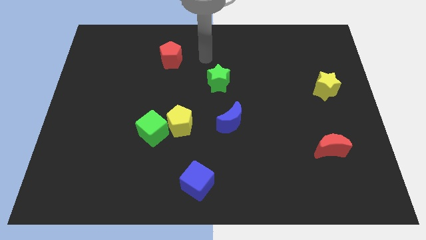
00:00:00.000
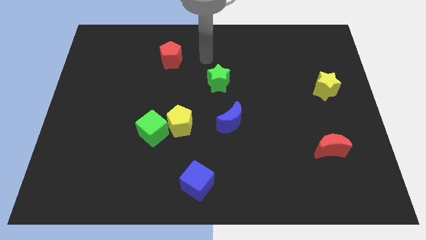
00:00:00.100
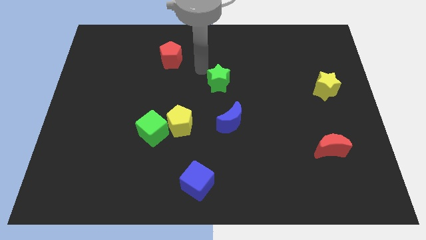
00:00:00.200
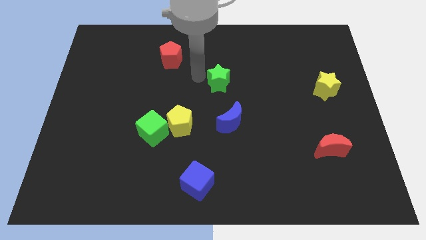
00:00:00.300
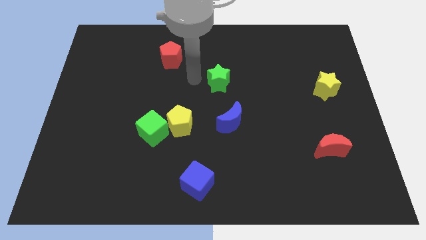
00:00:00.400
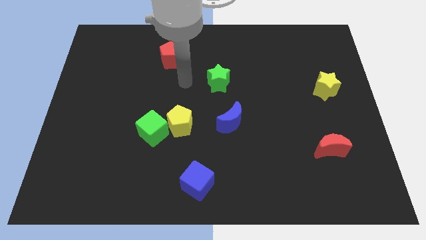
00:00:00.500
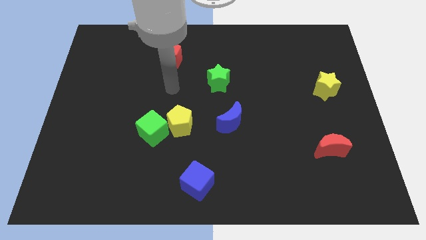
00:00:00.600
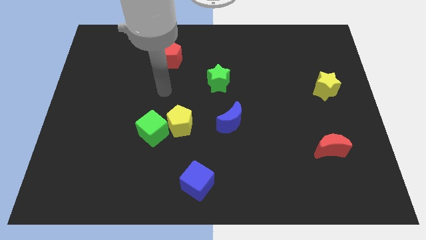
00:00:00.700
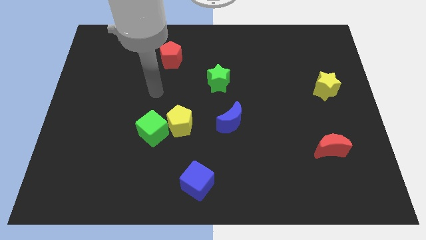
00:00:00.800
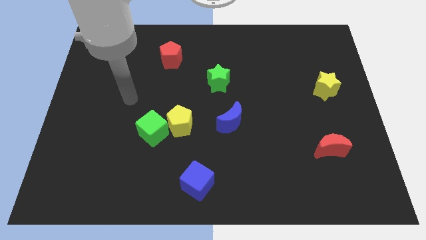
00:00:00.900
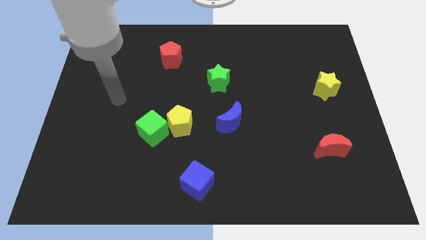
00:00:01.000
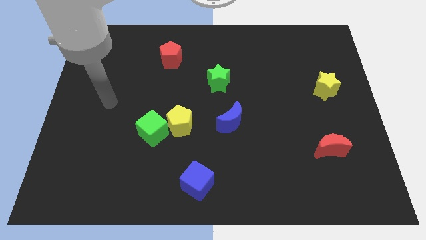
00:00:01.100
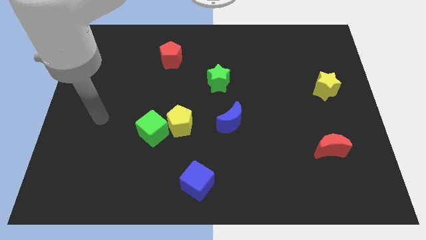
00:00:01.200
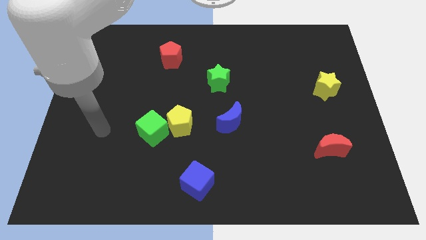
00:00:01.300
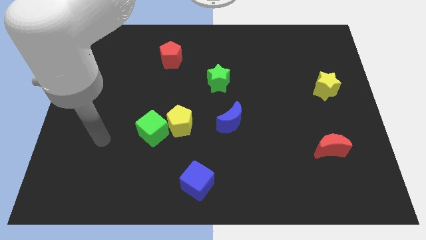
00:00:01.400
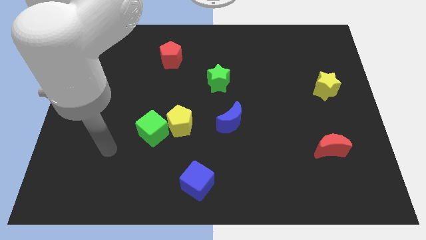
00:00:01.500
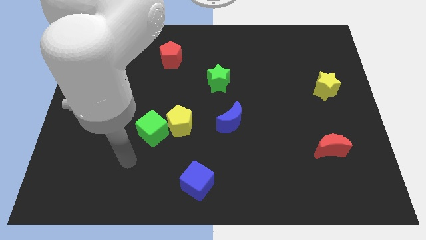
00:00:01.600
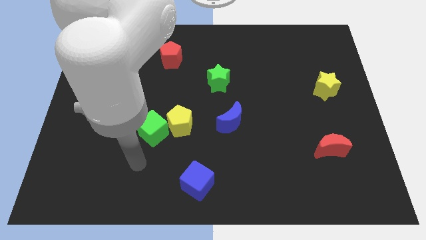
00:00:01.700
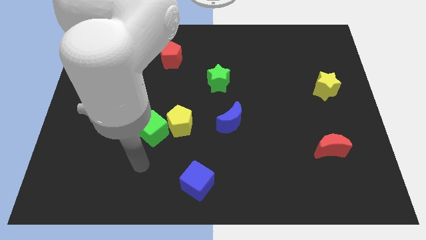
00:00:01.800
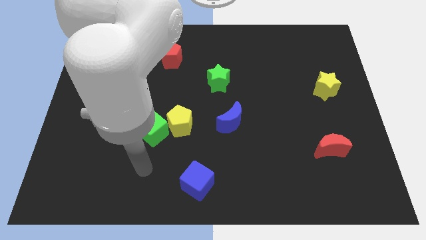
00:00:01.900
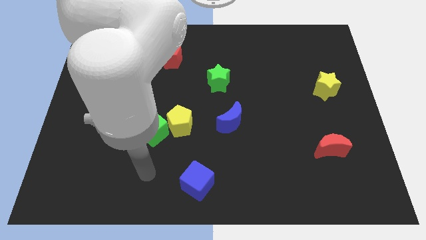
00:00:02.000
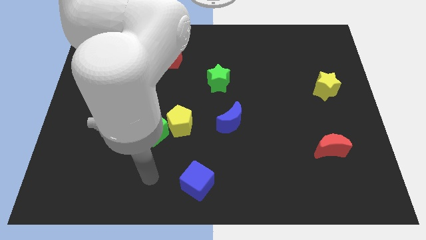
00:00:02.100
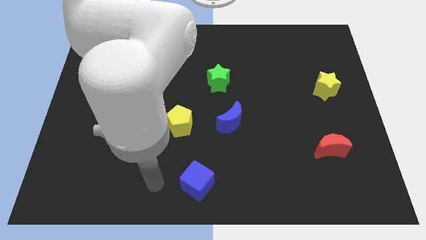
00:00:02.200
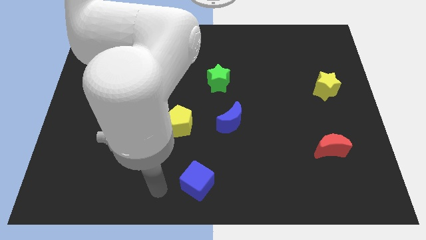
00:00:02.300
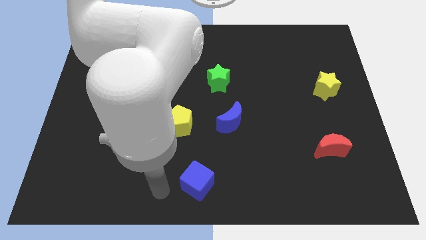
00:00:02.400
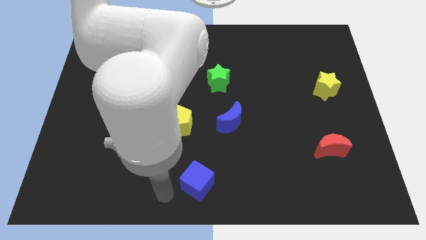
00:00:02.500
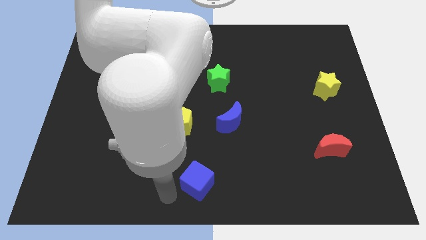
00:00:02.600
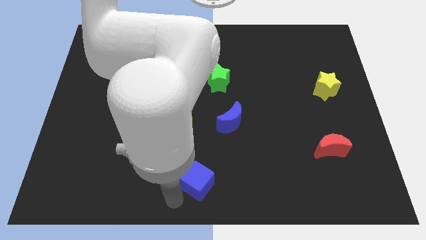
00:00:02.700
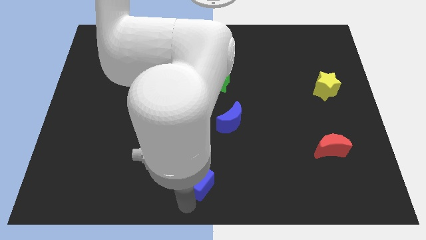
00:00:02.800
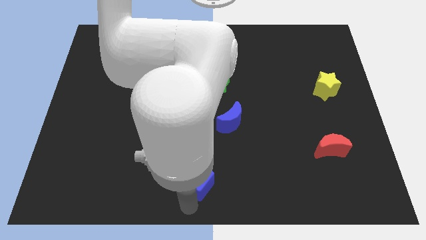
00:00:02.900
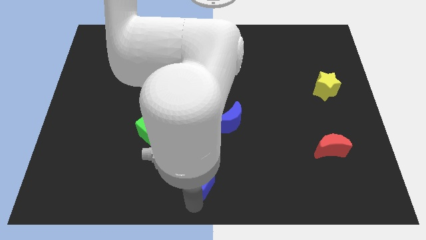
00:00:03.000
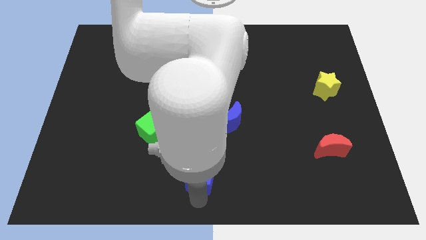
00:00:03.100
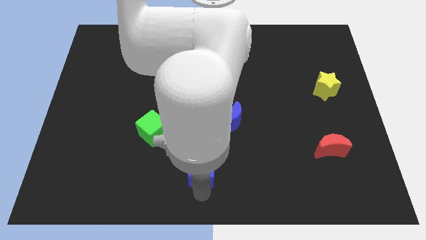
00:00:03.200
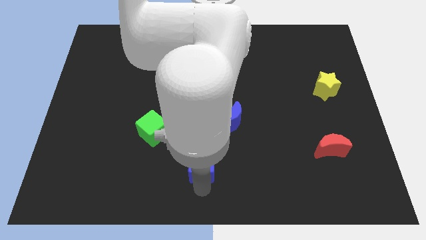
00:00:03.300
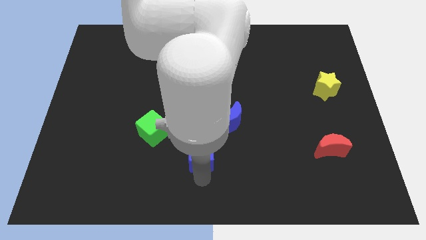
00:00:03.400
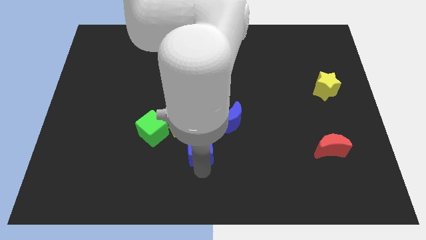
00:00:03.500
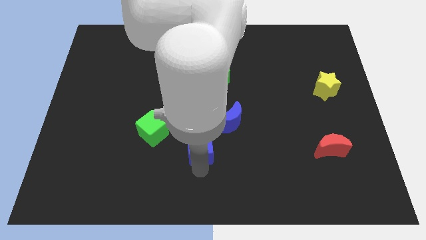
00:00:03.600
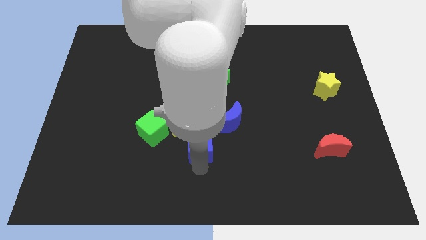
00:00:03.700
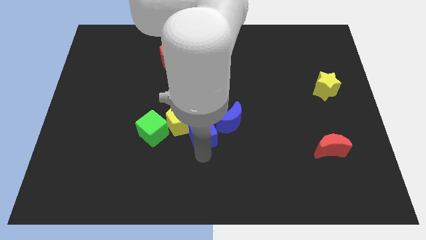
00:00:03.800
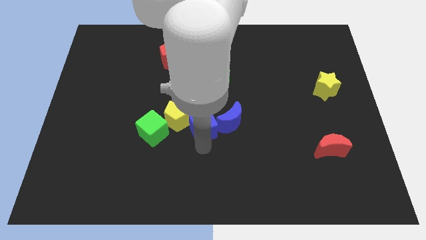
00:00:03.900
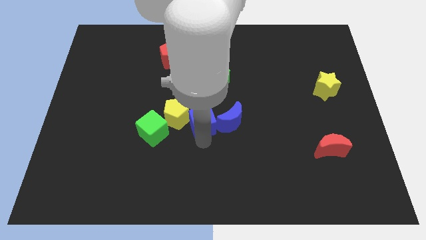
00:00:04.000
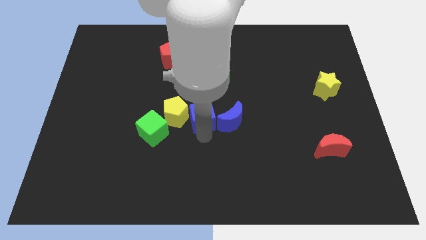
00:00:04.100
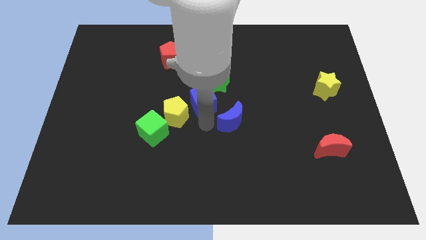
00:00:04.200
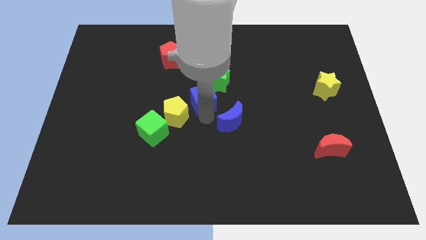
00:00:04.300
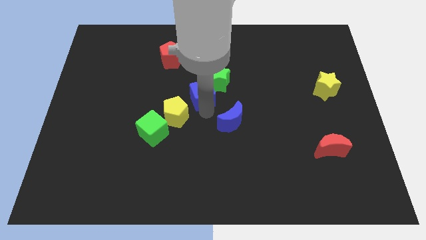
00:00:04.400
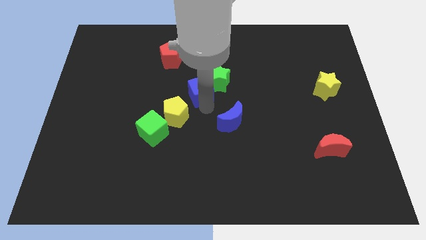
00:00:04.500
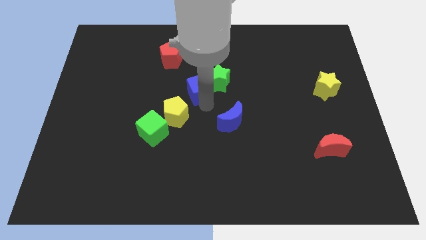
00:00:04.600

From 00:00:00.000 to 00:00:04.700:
put the blue cube next to the green star

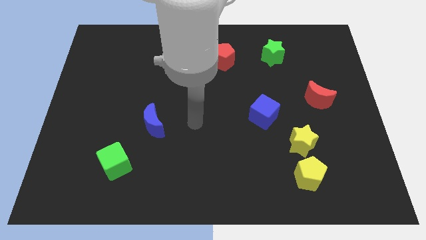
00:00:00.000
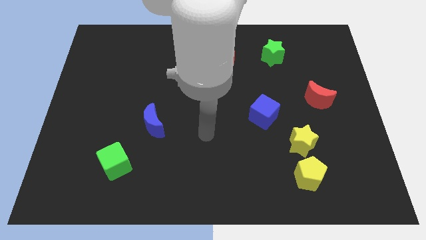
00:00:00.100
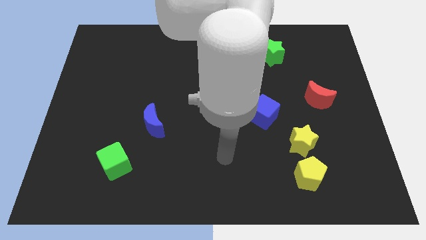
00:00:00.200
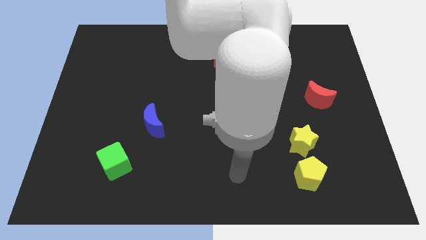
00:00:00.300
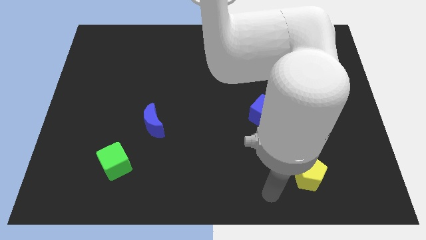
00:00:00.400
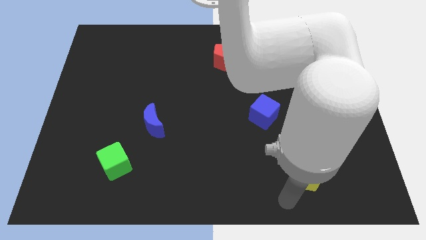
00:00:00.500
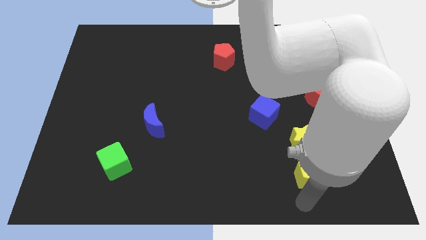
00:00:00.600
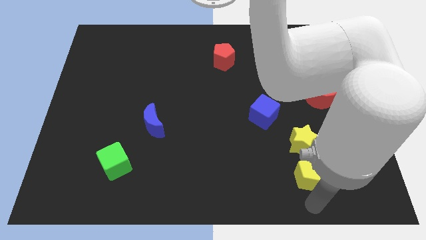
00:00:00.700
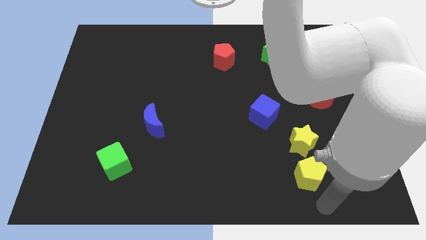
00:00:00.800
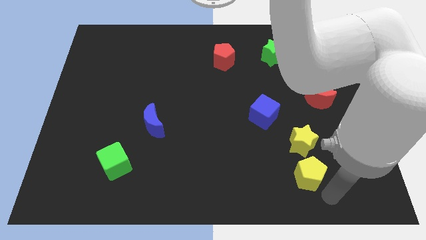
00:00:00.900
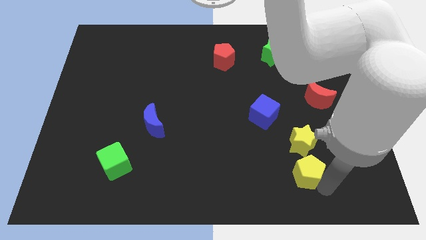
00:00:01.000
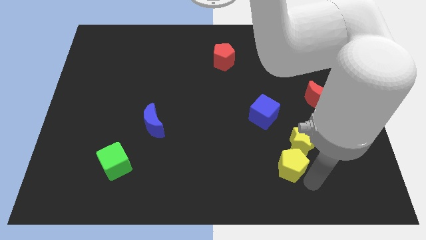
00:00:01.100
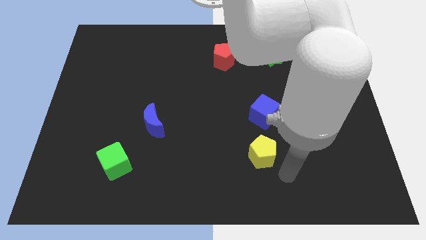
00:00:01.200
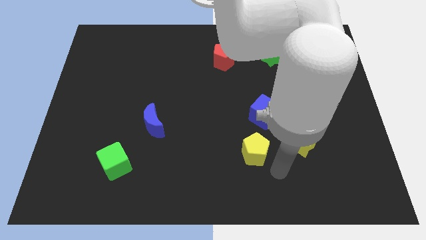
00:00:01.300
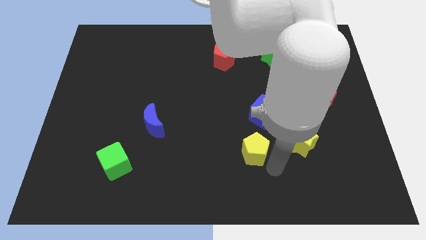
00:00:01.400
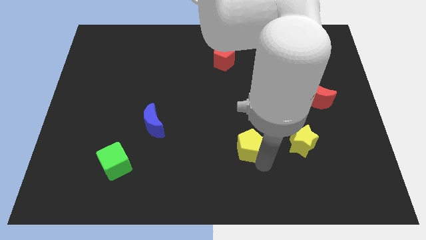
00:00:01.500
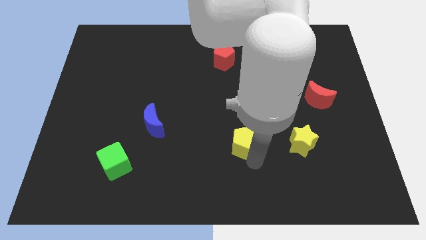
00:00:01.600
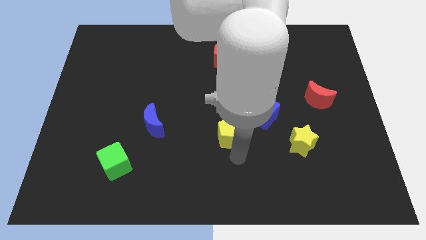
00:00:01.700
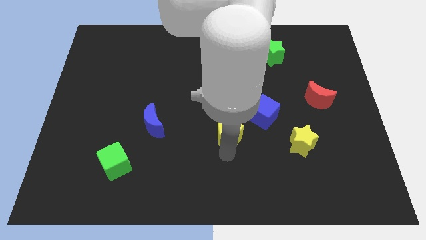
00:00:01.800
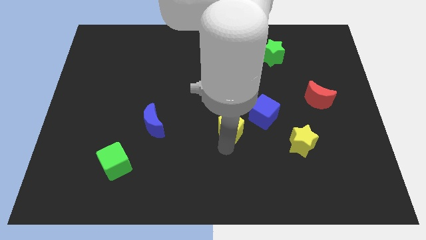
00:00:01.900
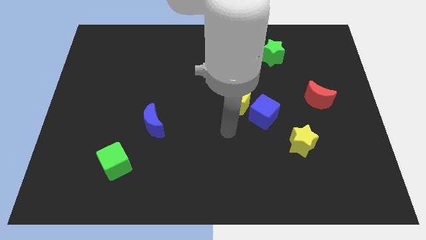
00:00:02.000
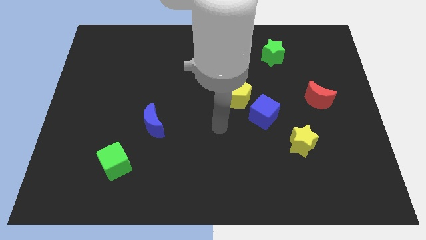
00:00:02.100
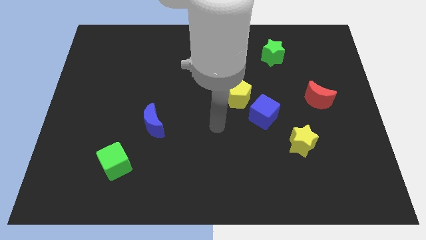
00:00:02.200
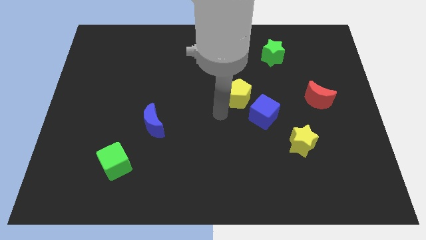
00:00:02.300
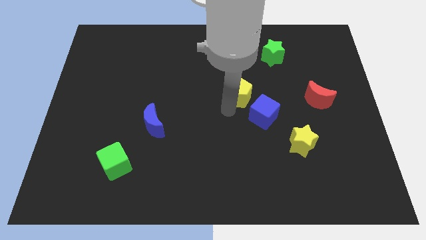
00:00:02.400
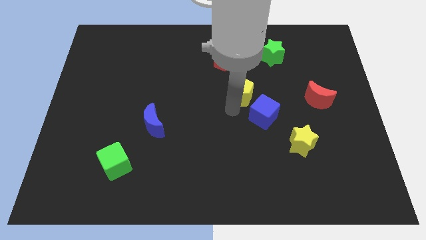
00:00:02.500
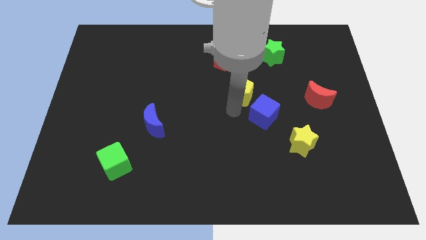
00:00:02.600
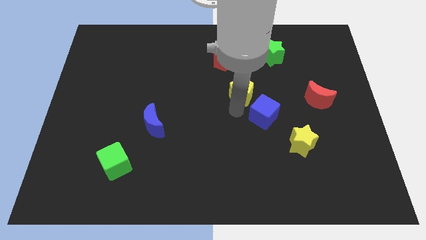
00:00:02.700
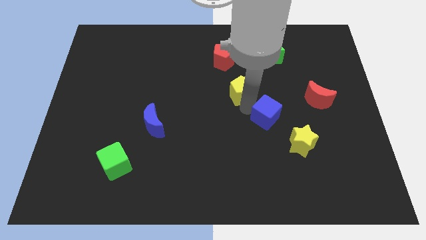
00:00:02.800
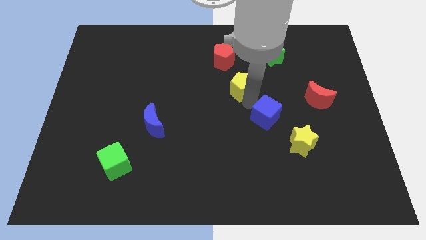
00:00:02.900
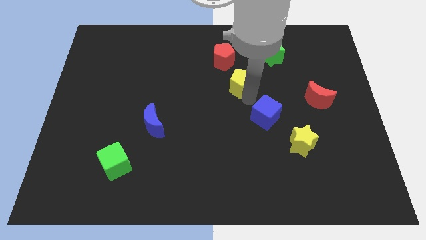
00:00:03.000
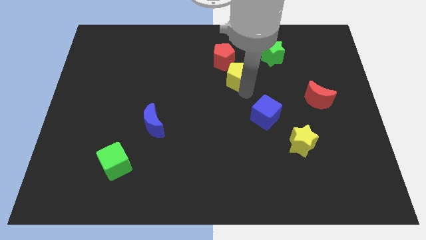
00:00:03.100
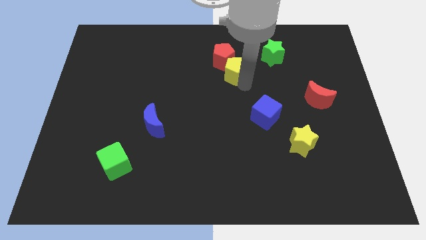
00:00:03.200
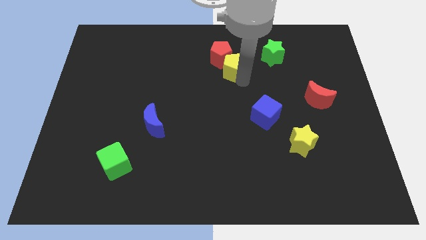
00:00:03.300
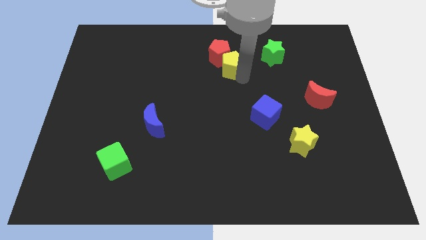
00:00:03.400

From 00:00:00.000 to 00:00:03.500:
push the yellow pentagon to the red pentagon
